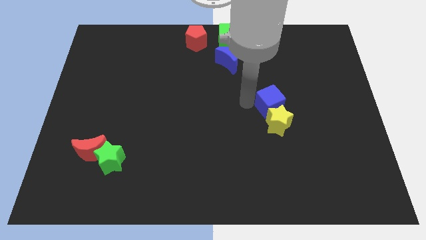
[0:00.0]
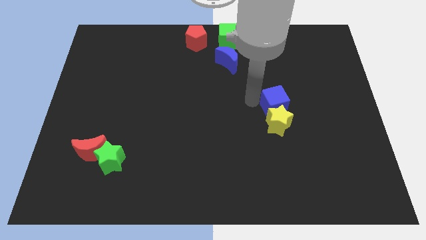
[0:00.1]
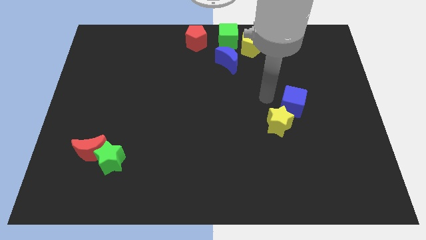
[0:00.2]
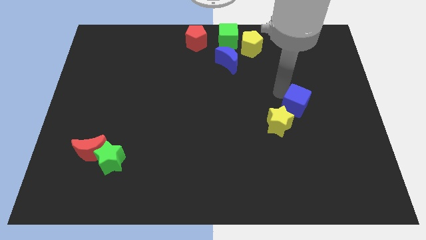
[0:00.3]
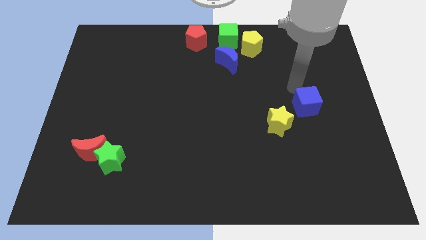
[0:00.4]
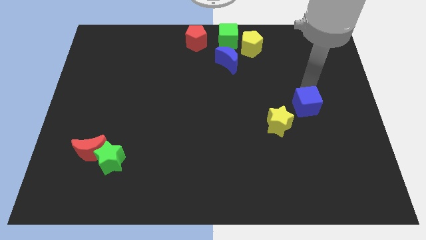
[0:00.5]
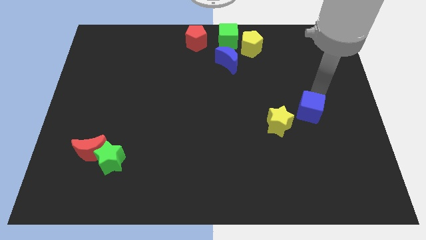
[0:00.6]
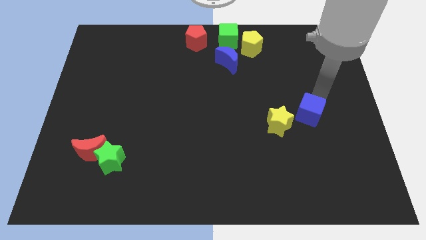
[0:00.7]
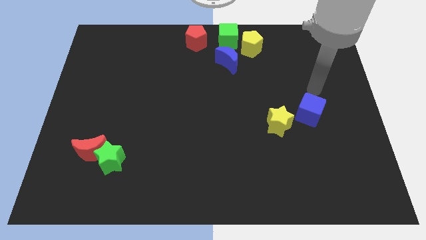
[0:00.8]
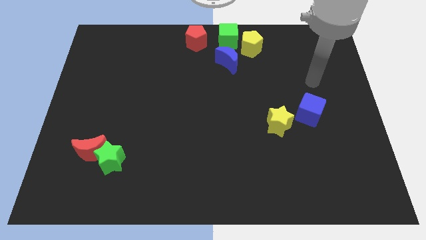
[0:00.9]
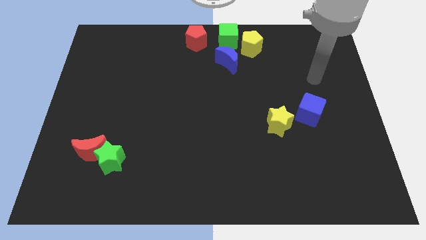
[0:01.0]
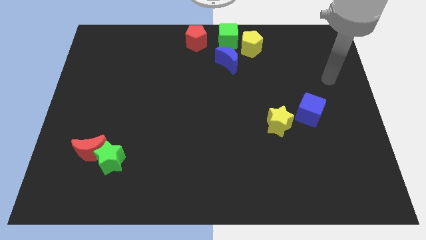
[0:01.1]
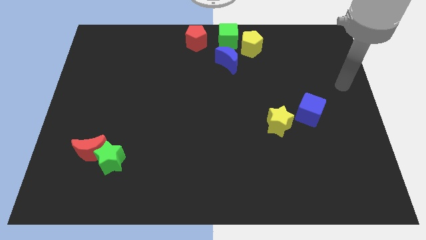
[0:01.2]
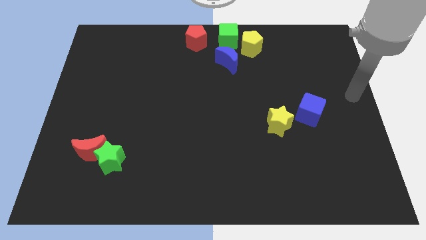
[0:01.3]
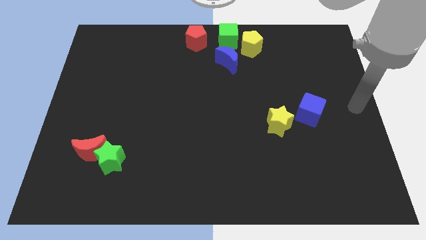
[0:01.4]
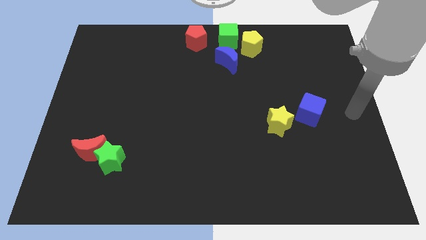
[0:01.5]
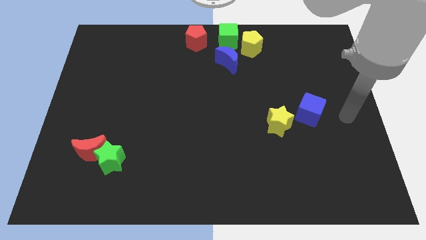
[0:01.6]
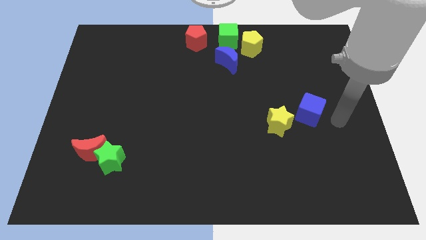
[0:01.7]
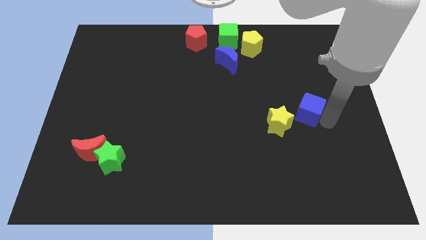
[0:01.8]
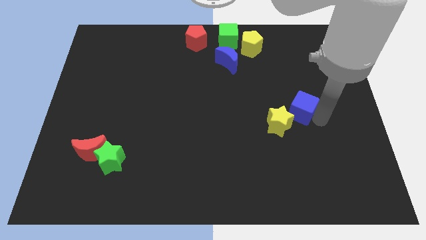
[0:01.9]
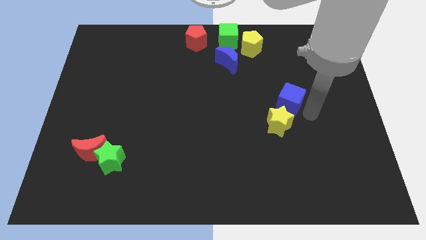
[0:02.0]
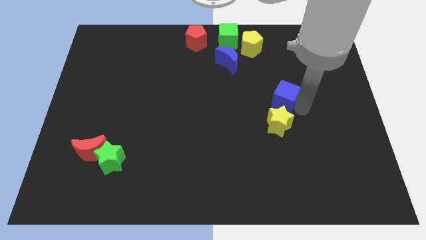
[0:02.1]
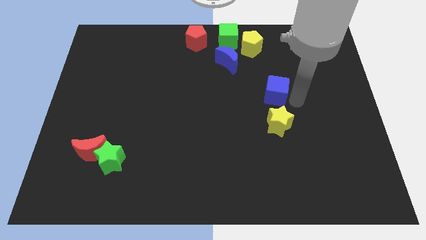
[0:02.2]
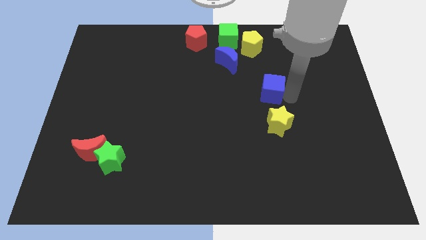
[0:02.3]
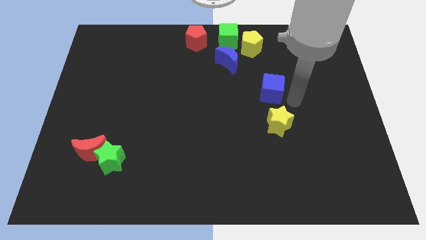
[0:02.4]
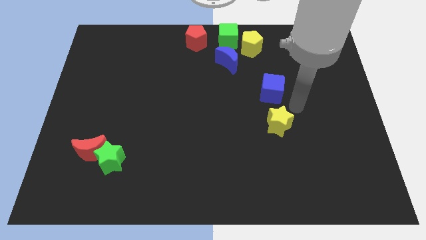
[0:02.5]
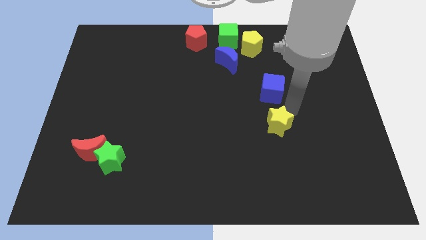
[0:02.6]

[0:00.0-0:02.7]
push blue cube above yellow star

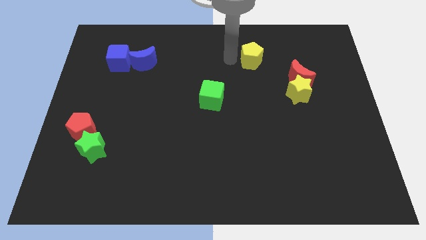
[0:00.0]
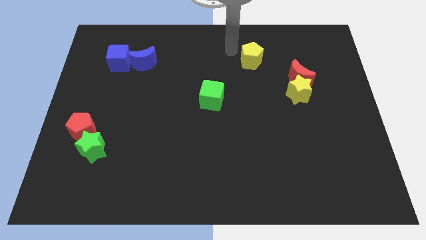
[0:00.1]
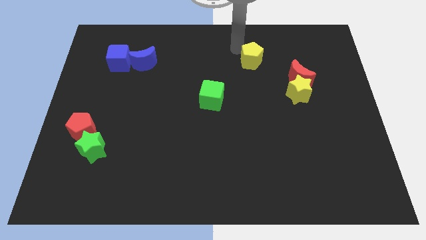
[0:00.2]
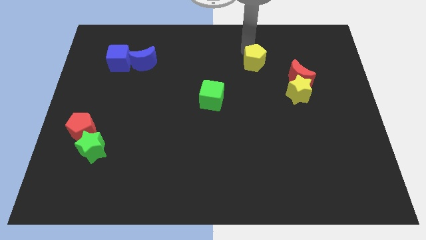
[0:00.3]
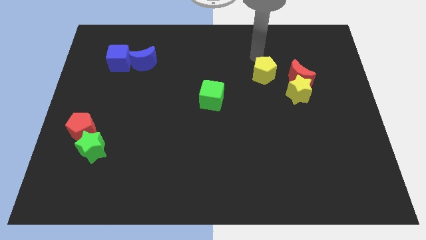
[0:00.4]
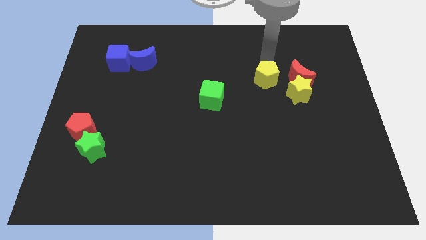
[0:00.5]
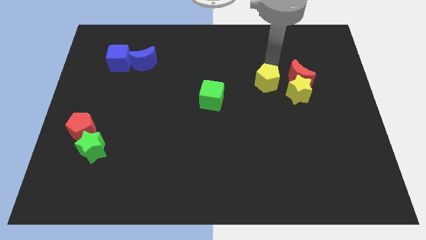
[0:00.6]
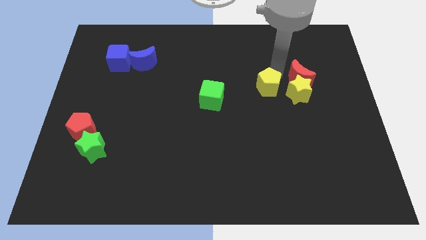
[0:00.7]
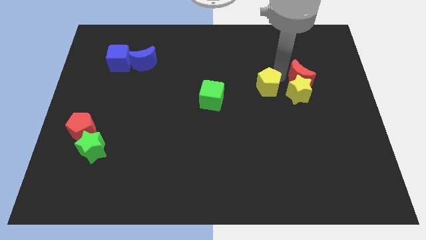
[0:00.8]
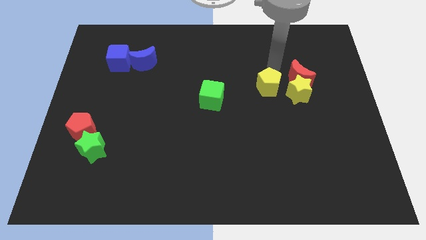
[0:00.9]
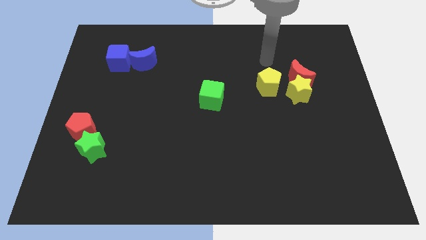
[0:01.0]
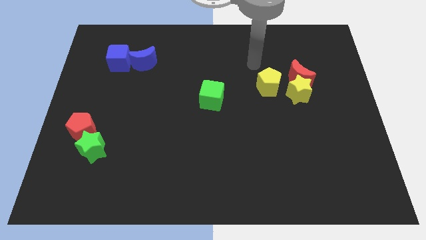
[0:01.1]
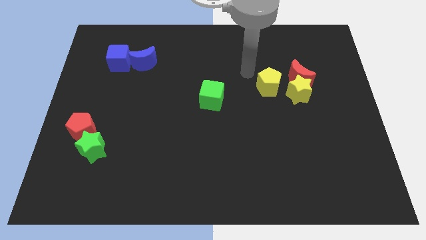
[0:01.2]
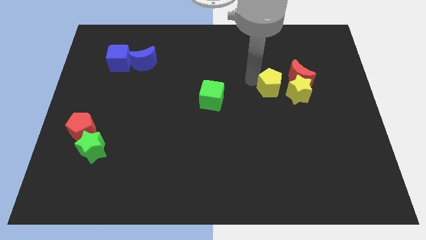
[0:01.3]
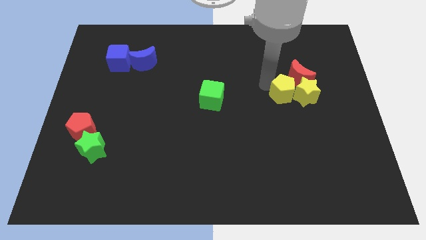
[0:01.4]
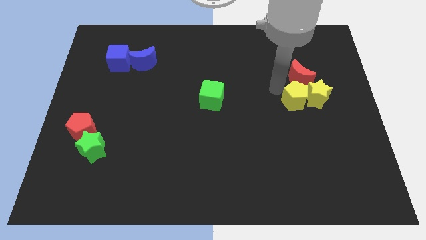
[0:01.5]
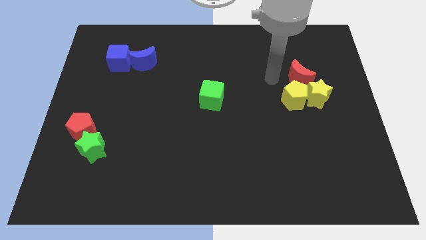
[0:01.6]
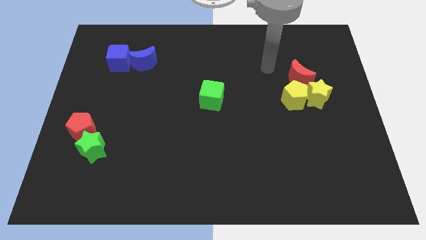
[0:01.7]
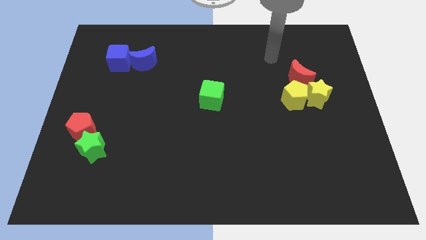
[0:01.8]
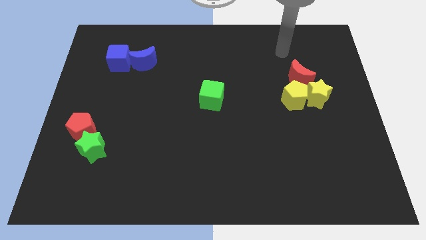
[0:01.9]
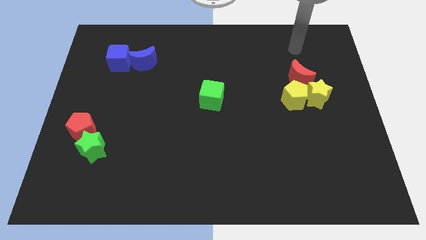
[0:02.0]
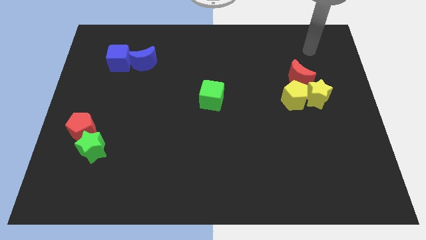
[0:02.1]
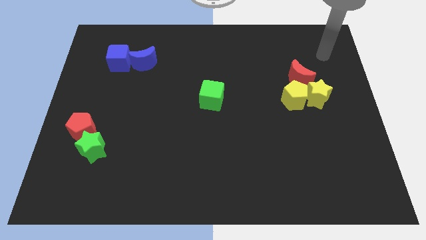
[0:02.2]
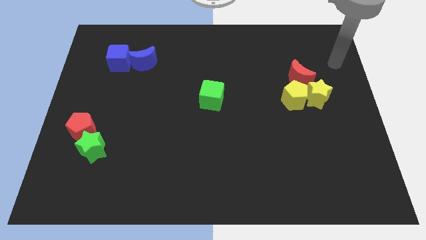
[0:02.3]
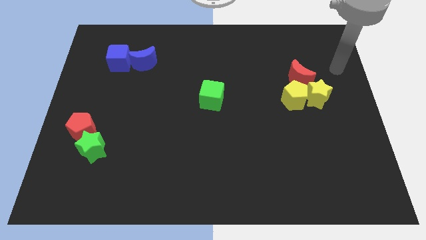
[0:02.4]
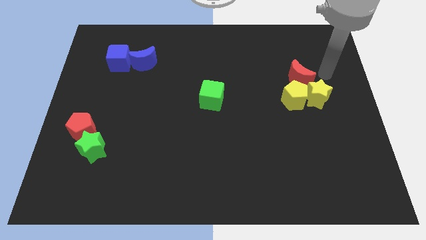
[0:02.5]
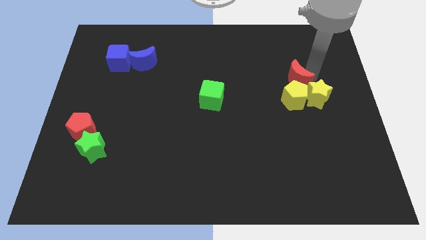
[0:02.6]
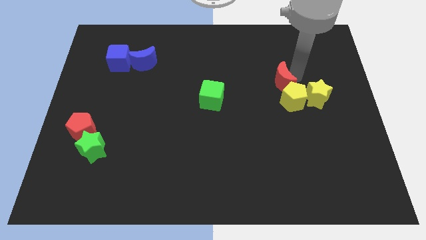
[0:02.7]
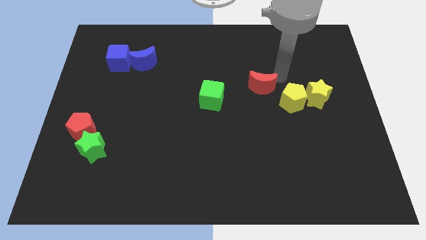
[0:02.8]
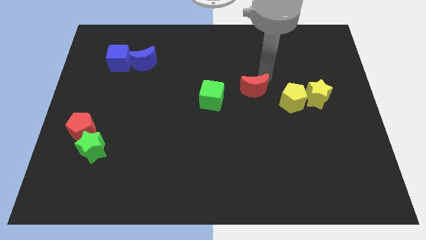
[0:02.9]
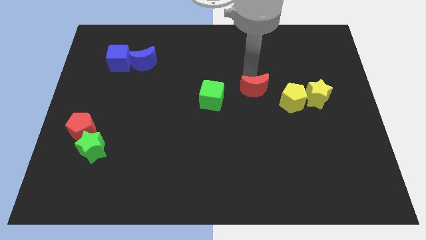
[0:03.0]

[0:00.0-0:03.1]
place red crescent in between green cube and yellow pentagon

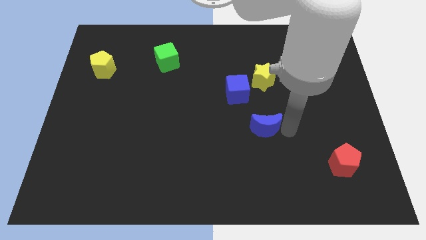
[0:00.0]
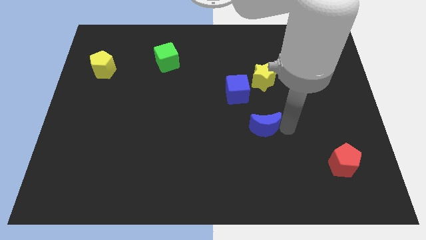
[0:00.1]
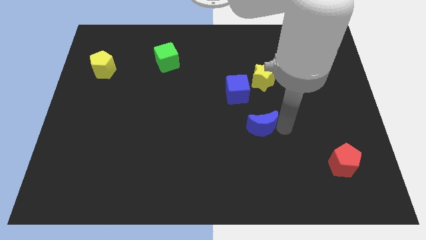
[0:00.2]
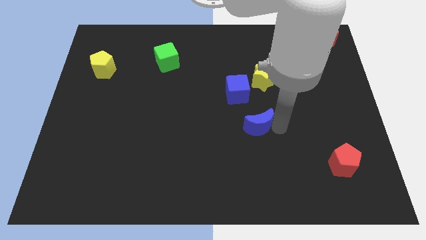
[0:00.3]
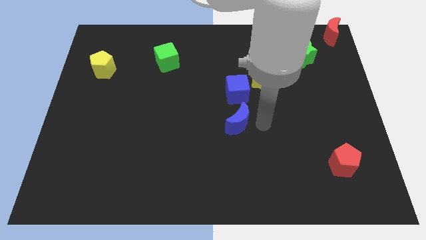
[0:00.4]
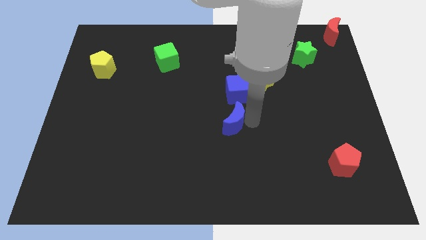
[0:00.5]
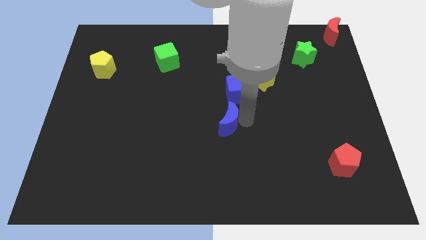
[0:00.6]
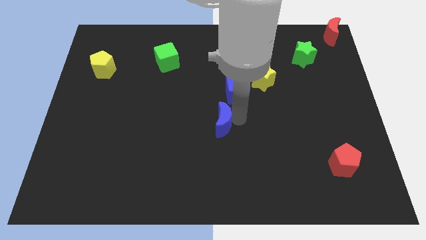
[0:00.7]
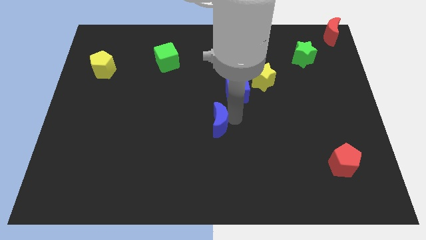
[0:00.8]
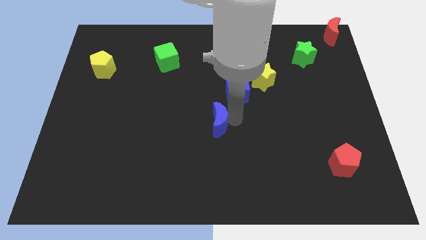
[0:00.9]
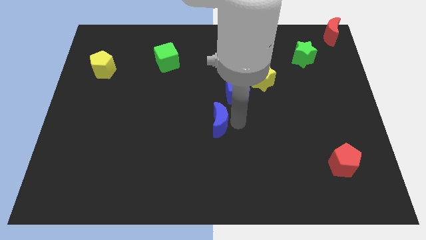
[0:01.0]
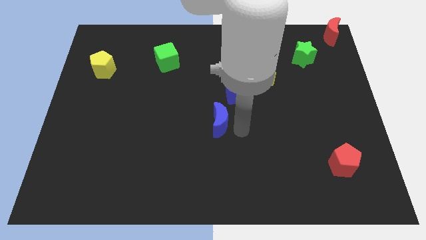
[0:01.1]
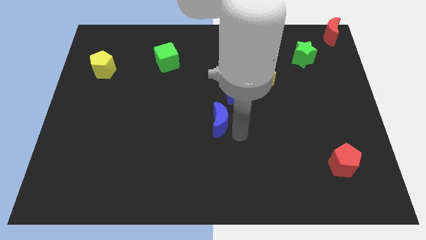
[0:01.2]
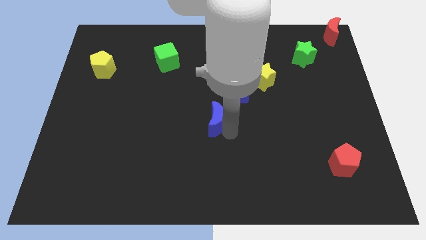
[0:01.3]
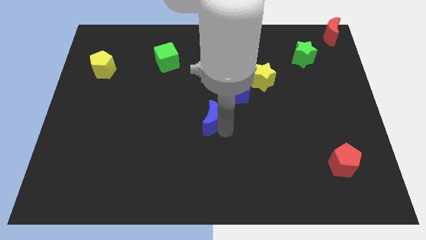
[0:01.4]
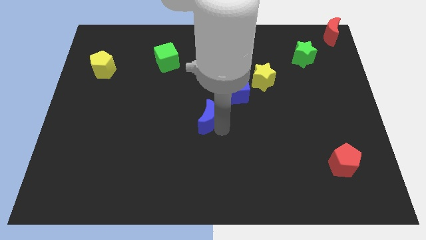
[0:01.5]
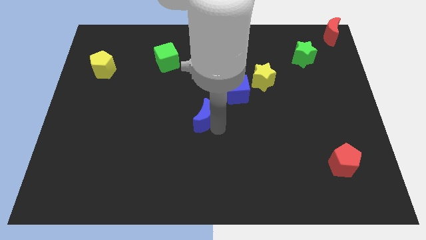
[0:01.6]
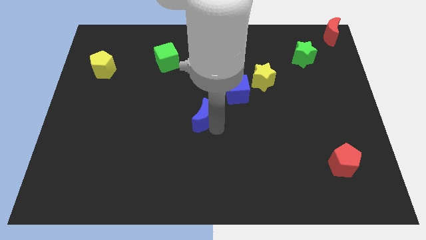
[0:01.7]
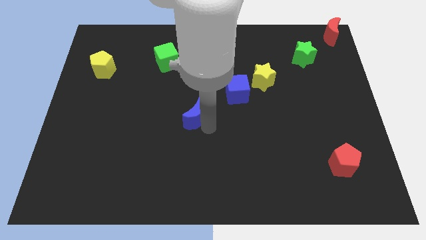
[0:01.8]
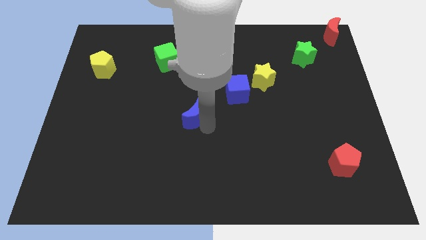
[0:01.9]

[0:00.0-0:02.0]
move the blue crescent to the center of the board

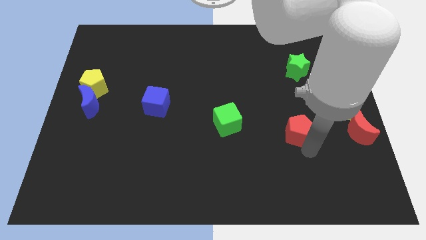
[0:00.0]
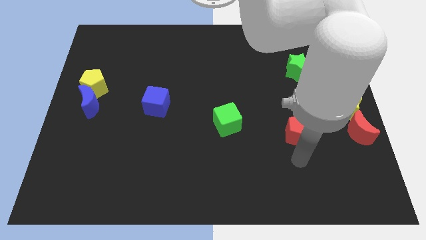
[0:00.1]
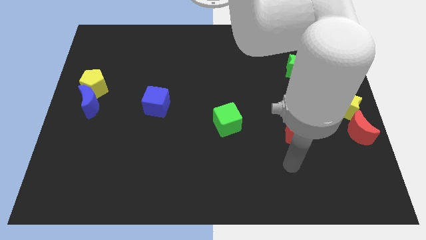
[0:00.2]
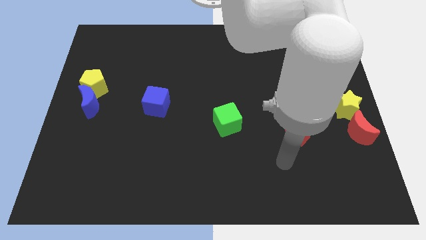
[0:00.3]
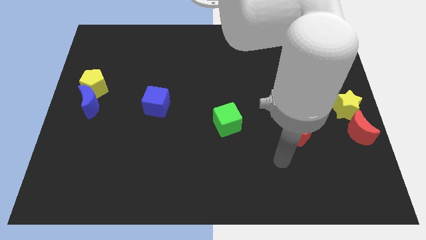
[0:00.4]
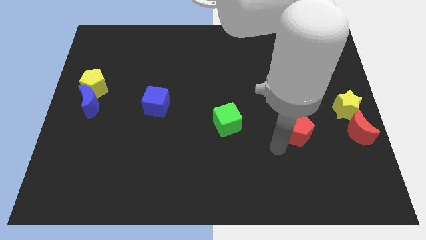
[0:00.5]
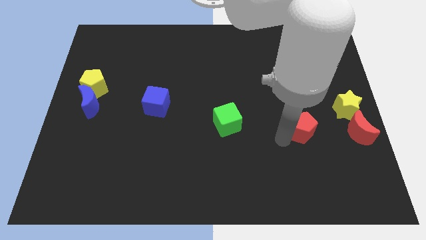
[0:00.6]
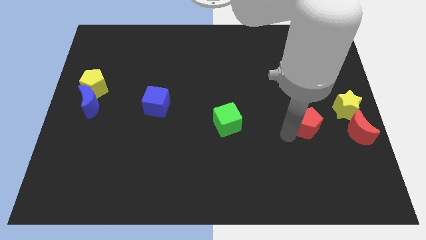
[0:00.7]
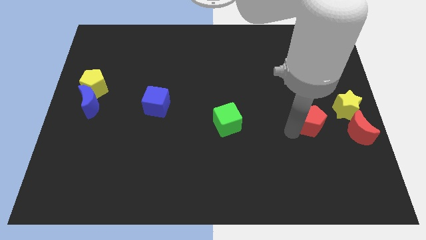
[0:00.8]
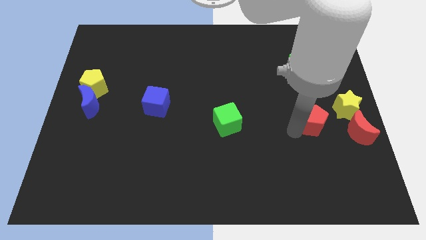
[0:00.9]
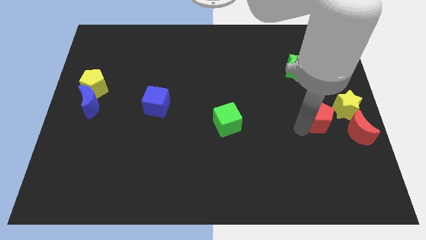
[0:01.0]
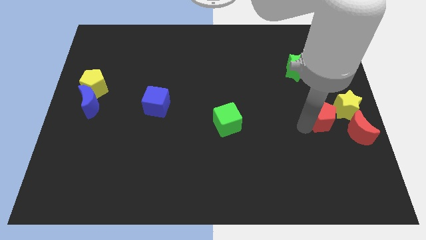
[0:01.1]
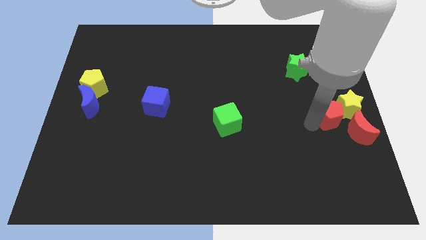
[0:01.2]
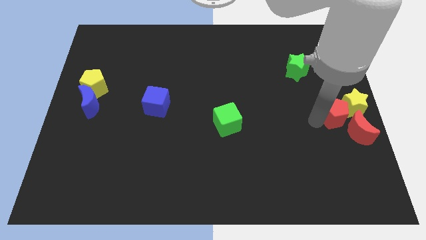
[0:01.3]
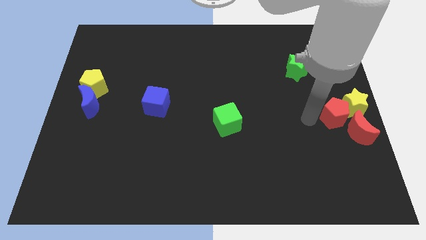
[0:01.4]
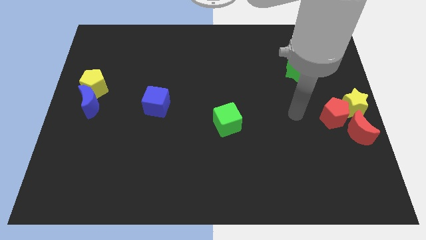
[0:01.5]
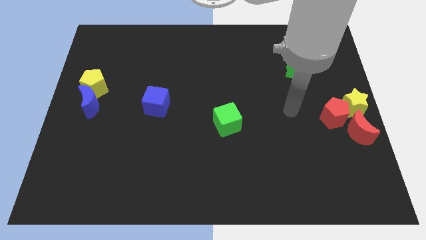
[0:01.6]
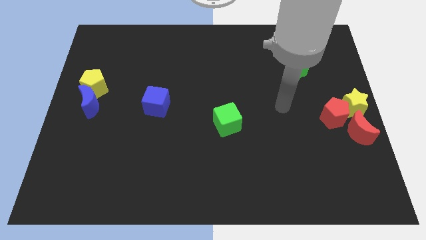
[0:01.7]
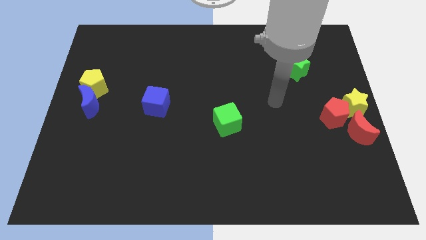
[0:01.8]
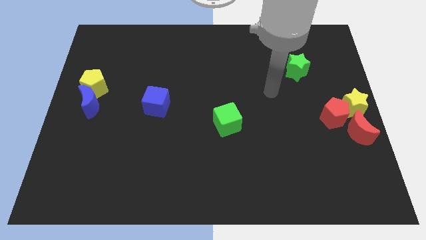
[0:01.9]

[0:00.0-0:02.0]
push the red pentagon into the yellow star
